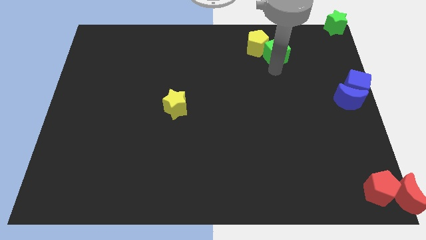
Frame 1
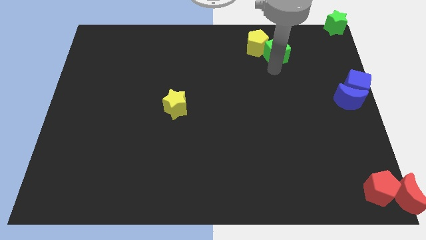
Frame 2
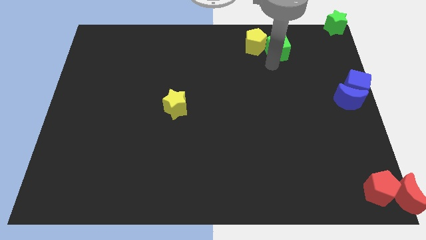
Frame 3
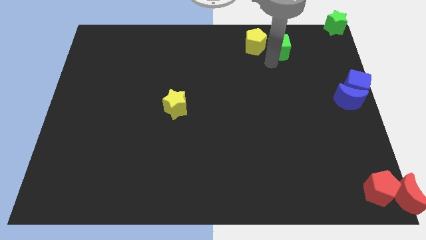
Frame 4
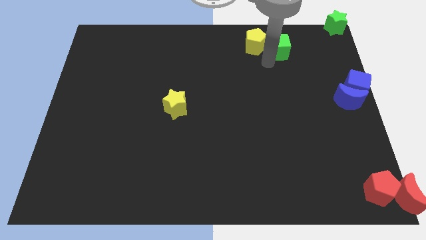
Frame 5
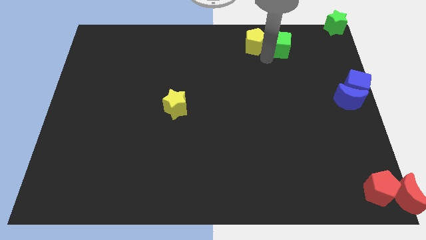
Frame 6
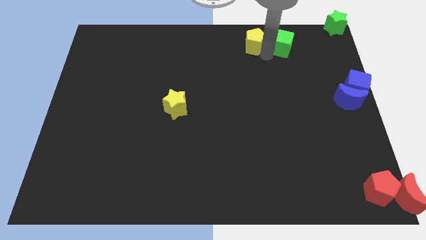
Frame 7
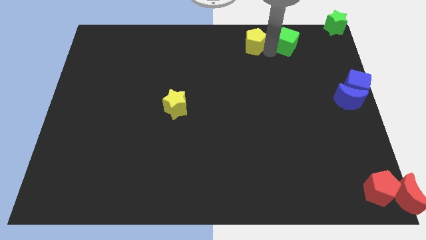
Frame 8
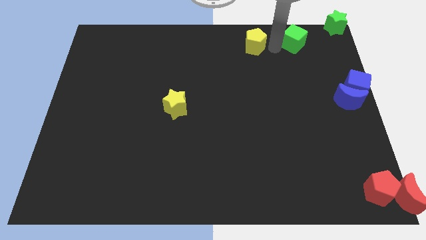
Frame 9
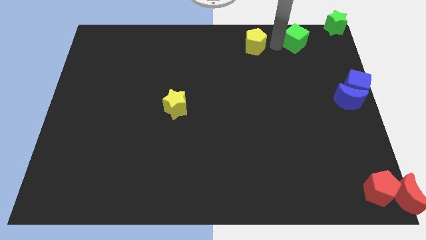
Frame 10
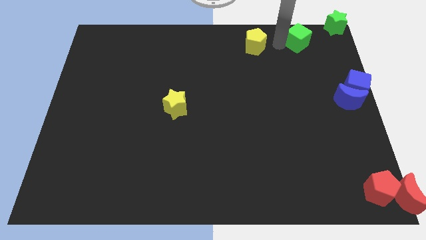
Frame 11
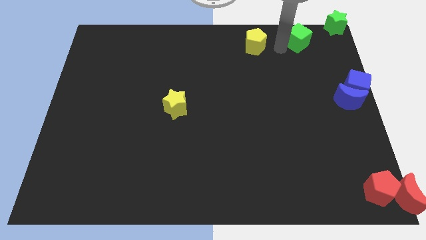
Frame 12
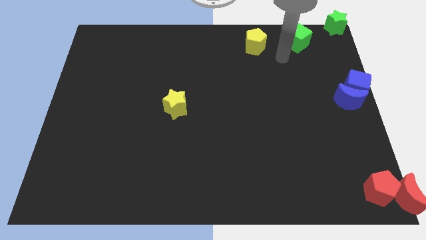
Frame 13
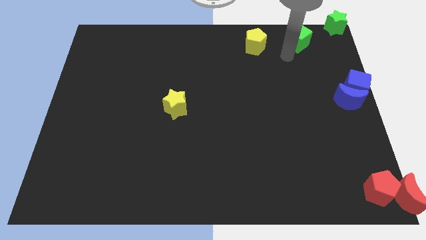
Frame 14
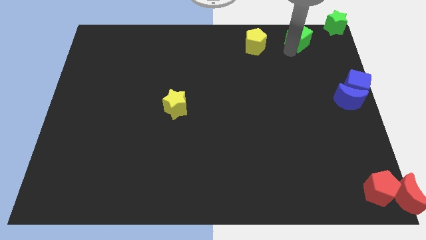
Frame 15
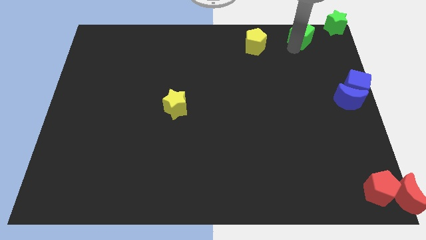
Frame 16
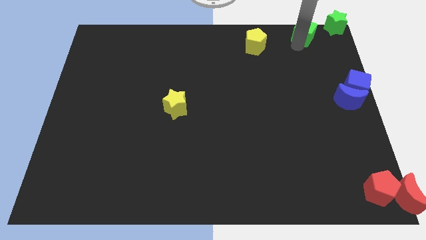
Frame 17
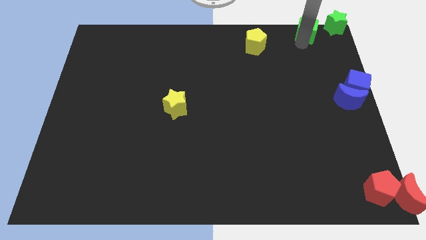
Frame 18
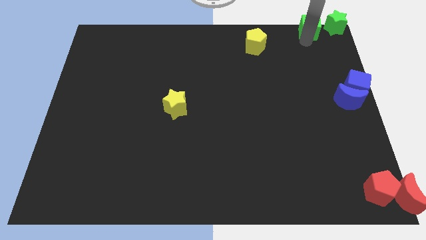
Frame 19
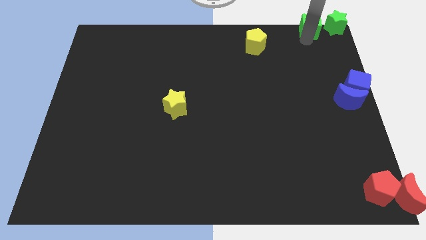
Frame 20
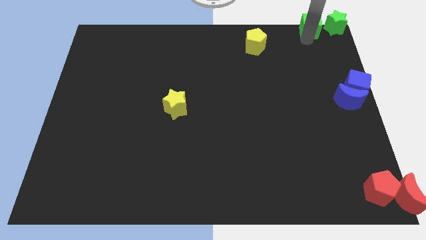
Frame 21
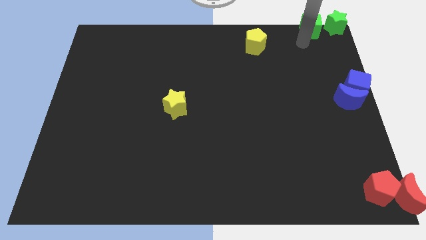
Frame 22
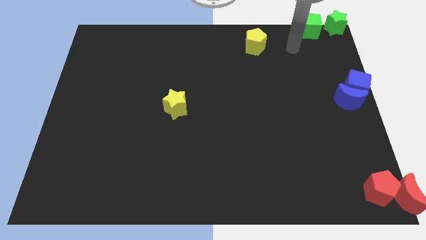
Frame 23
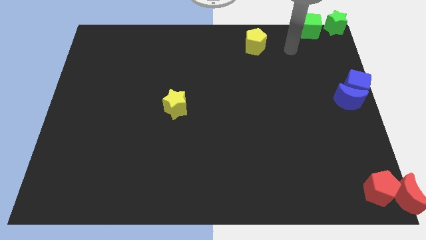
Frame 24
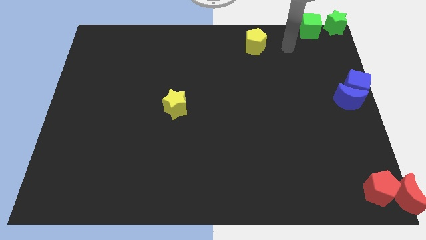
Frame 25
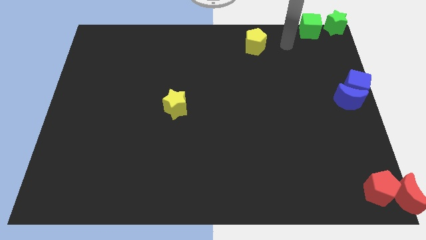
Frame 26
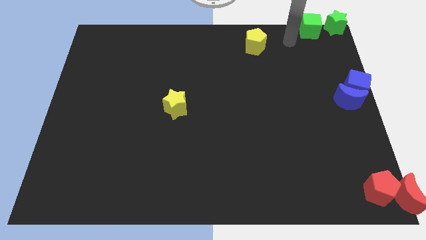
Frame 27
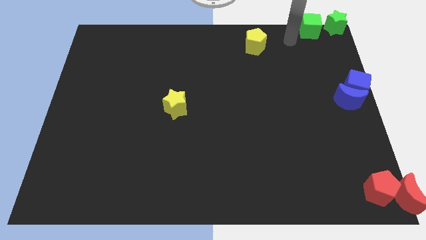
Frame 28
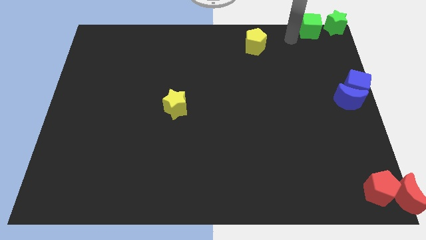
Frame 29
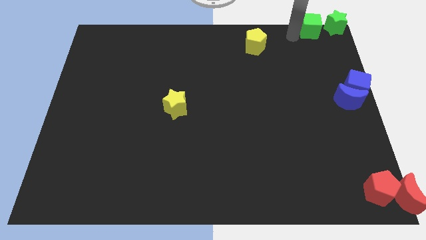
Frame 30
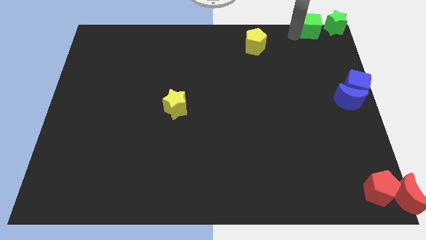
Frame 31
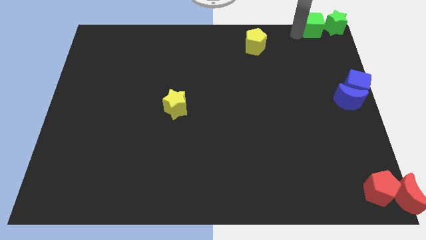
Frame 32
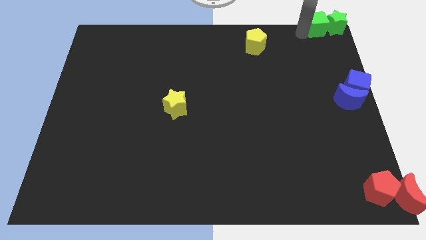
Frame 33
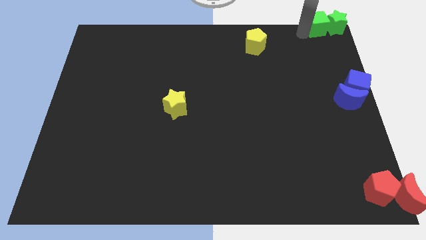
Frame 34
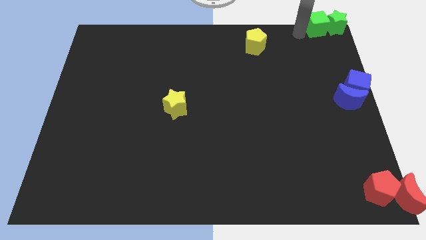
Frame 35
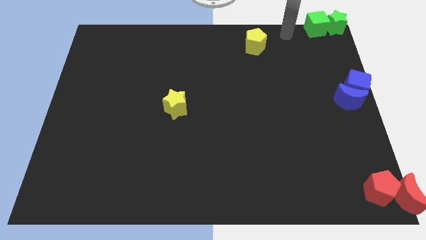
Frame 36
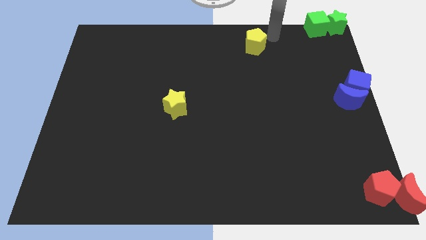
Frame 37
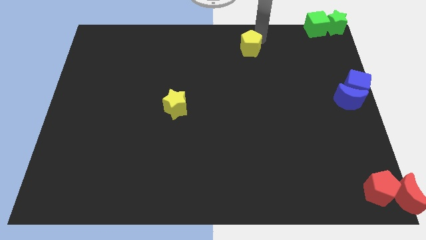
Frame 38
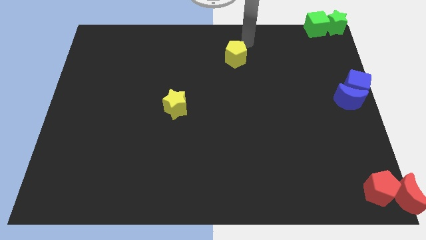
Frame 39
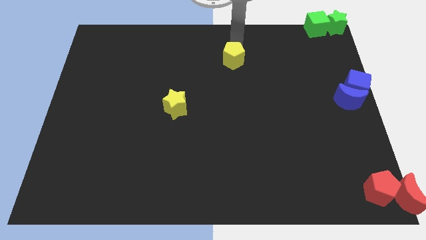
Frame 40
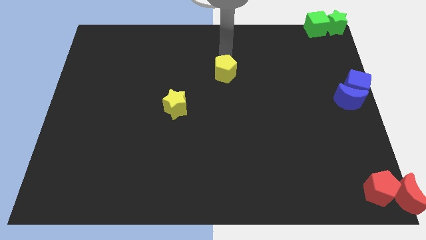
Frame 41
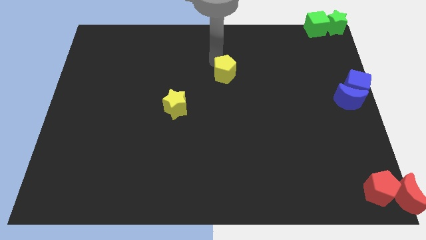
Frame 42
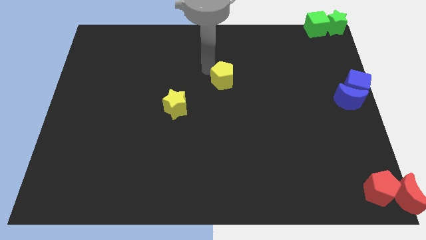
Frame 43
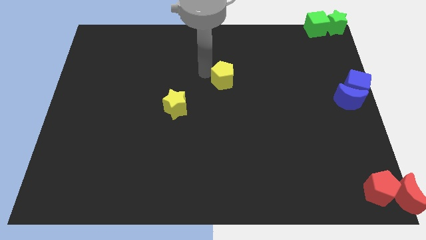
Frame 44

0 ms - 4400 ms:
push the green cube into the green star

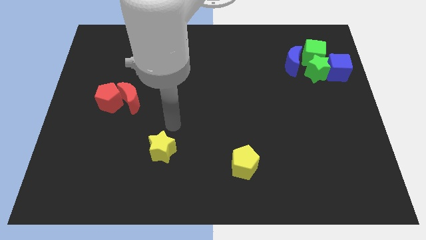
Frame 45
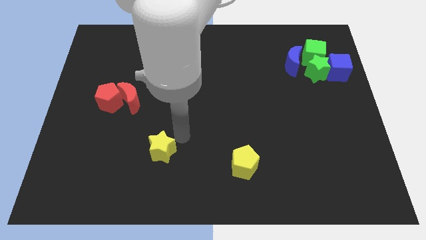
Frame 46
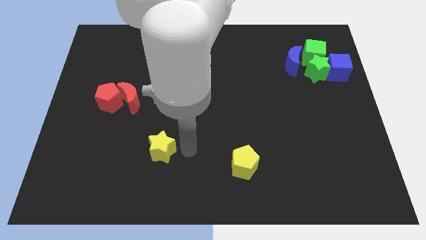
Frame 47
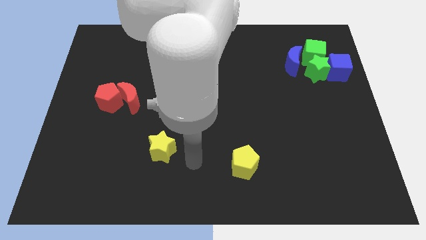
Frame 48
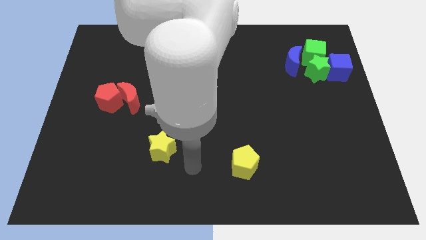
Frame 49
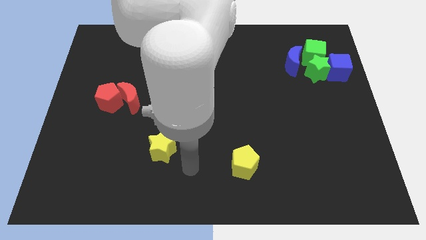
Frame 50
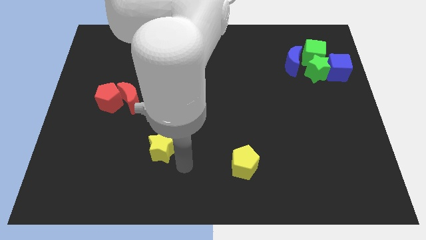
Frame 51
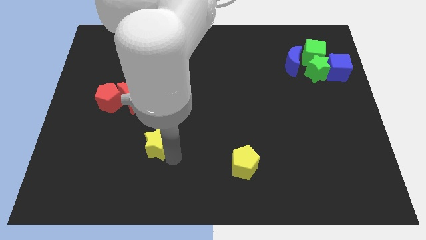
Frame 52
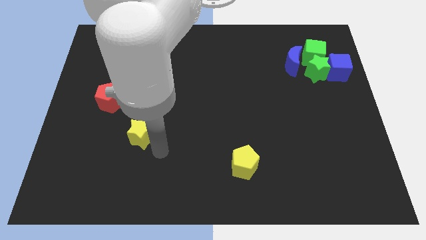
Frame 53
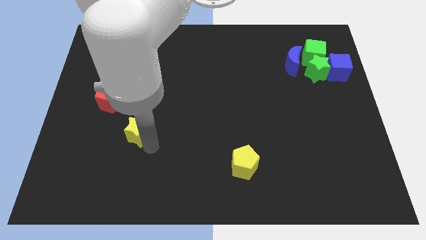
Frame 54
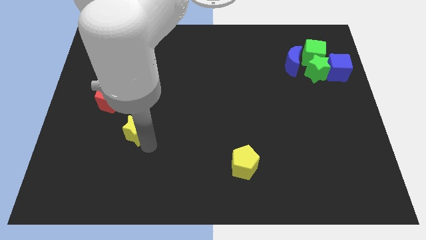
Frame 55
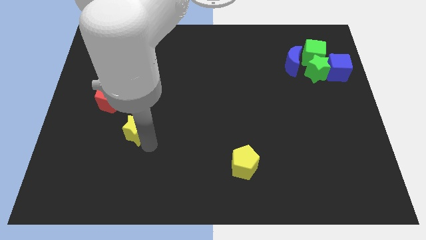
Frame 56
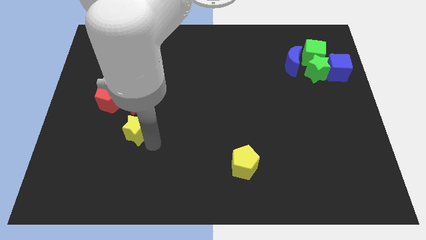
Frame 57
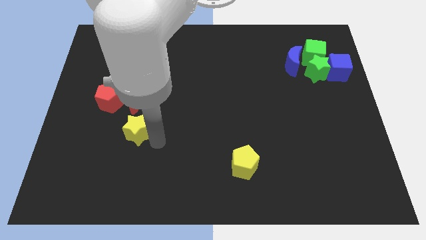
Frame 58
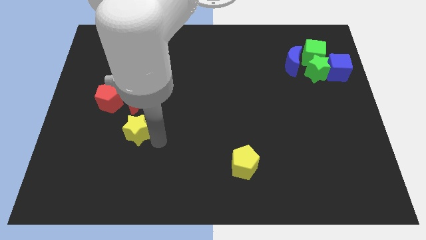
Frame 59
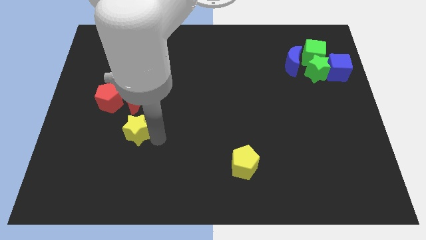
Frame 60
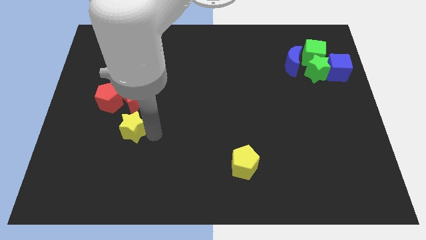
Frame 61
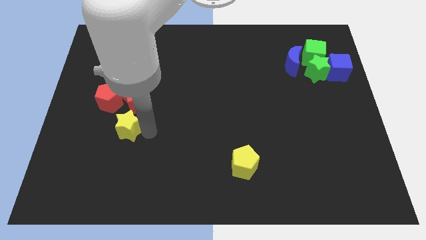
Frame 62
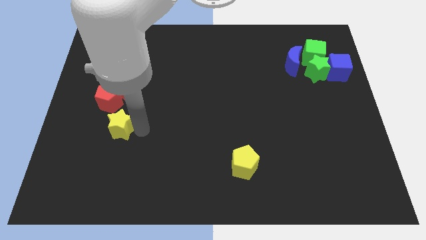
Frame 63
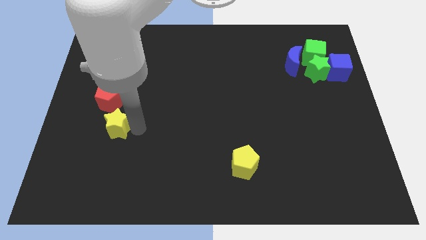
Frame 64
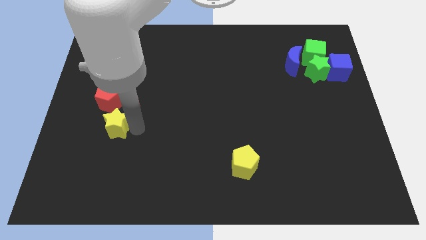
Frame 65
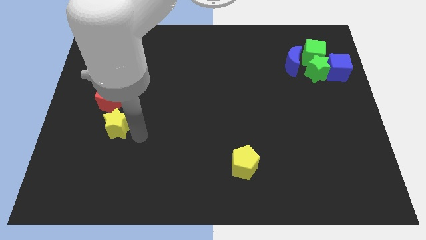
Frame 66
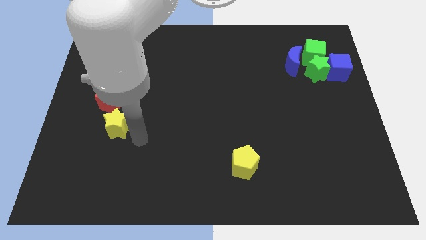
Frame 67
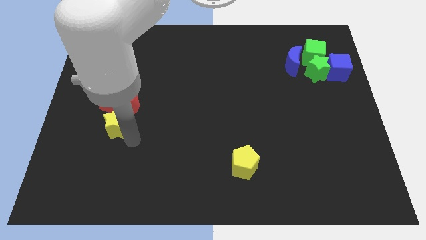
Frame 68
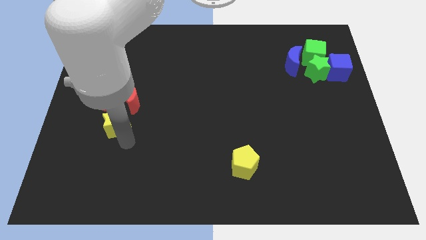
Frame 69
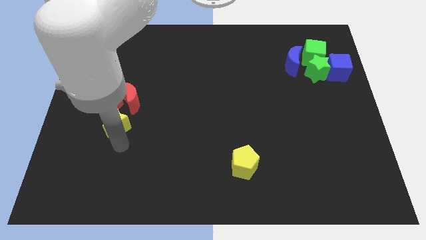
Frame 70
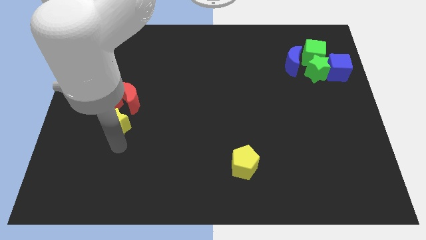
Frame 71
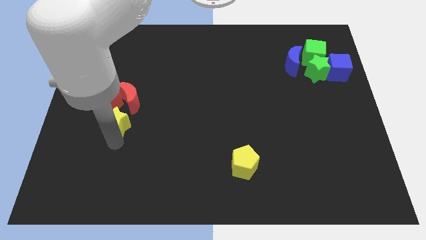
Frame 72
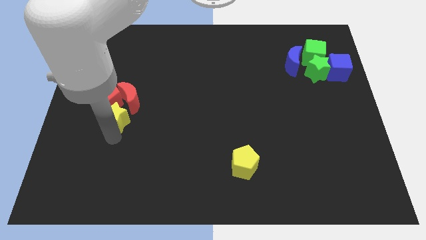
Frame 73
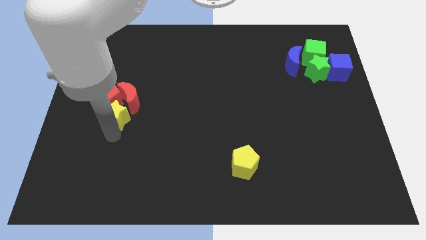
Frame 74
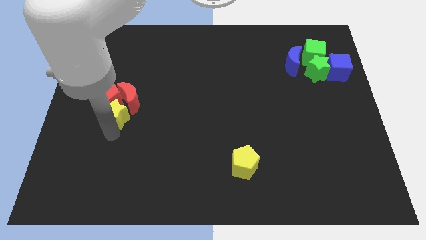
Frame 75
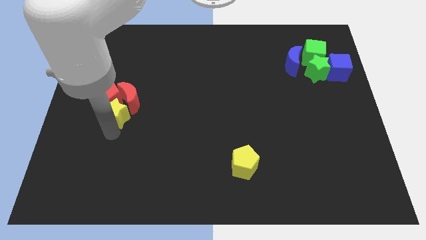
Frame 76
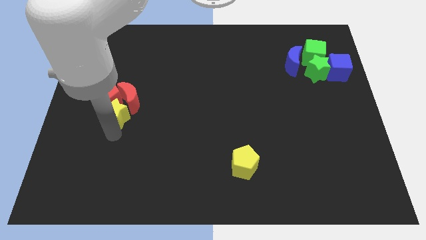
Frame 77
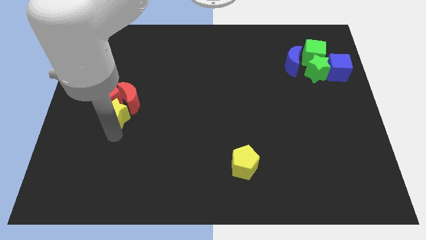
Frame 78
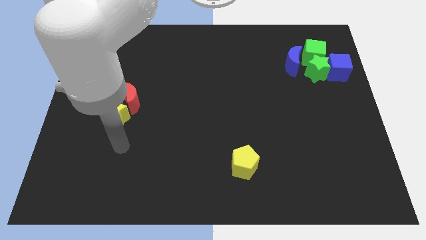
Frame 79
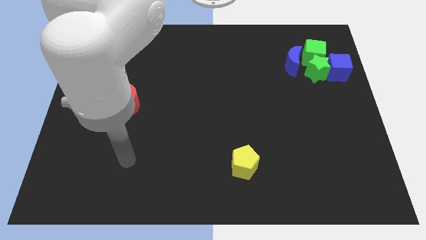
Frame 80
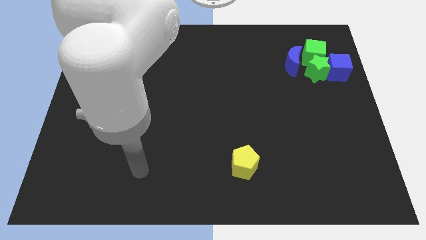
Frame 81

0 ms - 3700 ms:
move the yellow star towards the red blocks

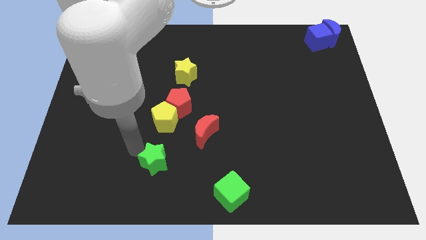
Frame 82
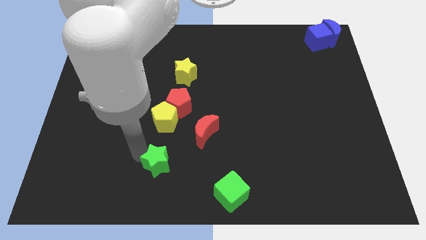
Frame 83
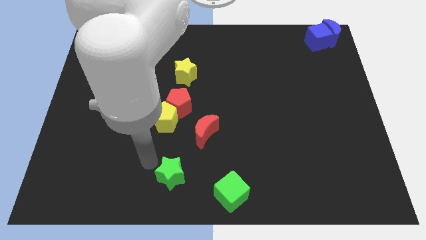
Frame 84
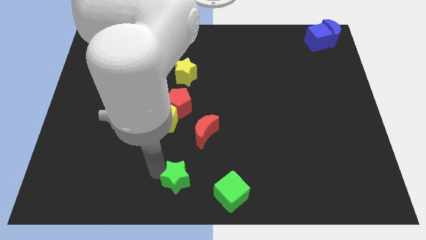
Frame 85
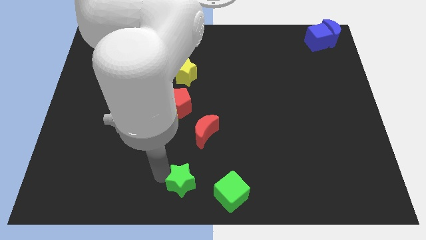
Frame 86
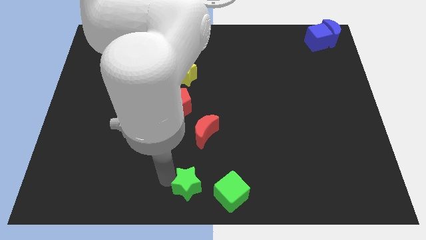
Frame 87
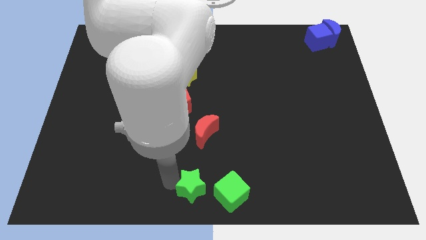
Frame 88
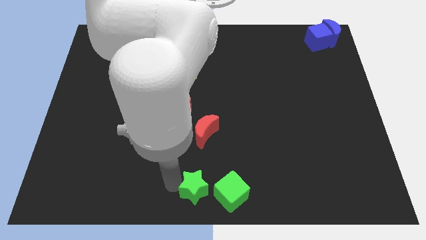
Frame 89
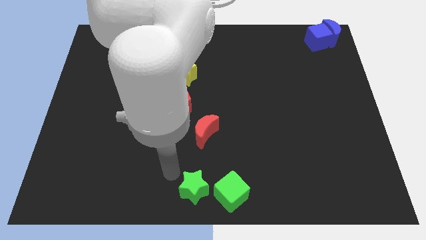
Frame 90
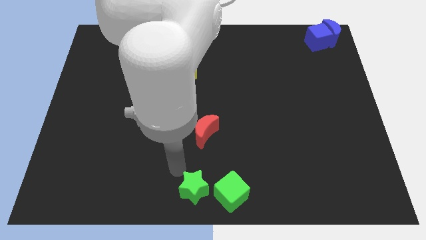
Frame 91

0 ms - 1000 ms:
place the green star towards green cube
